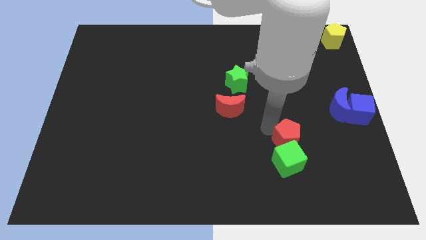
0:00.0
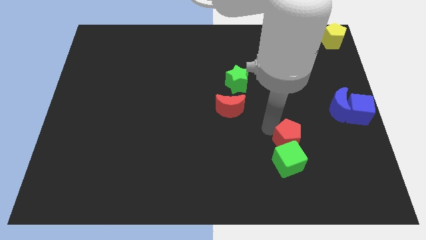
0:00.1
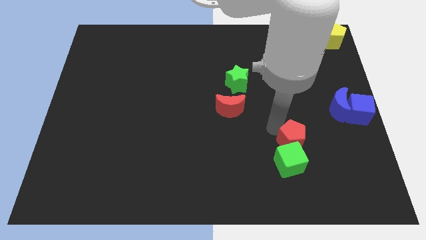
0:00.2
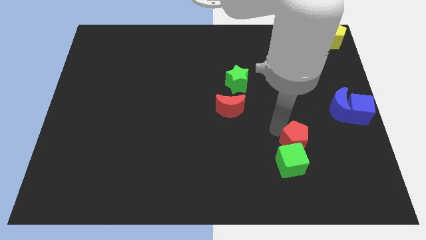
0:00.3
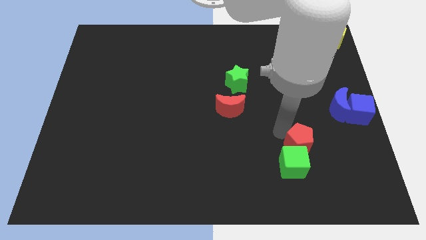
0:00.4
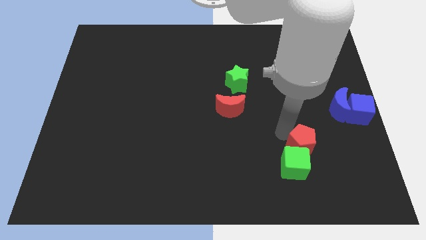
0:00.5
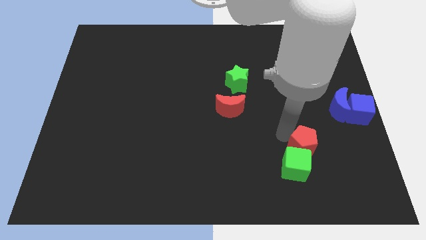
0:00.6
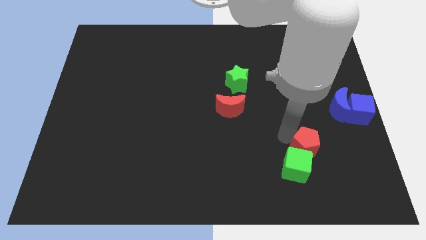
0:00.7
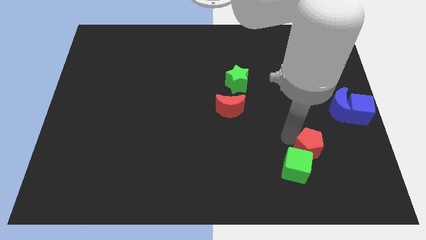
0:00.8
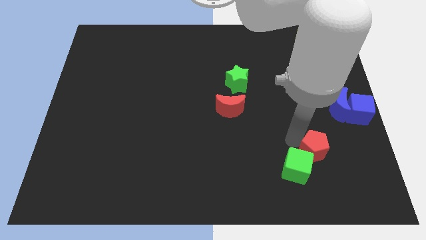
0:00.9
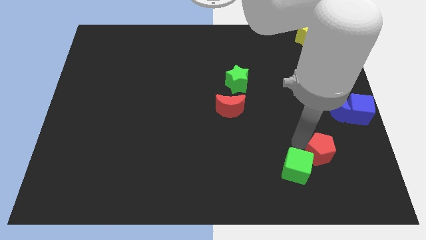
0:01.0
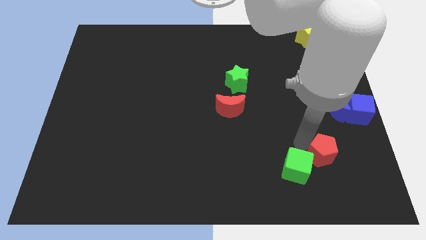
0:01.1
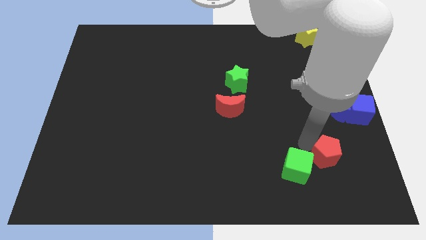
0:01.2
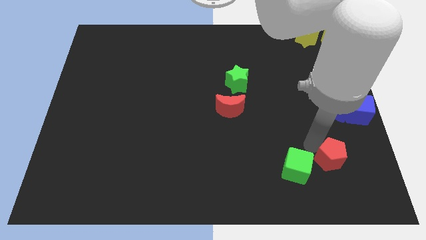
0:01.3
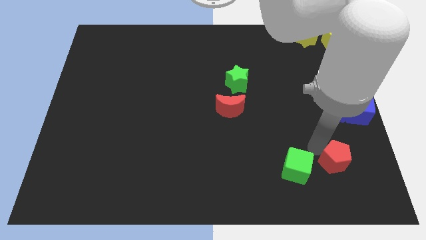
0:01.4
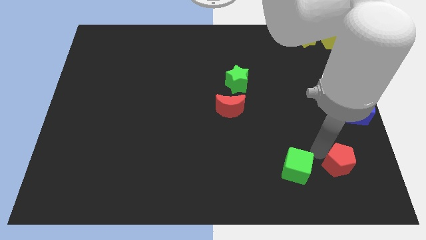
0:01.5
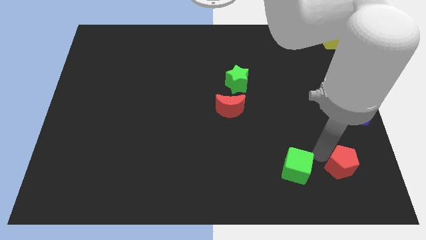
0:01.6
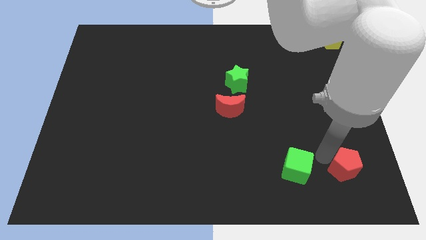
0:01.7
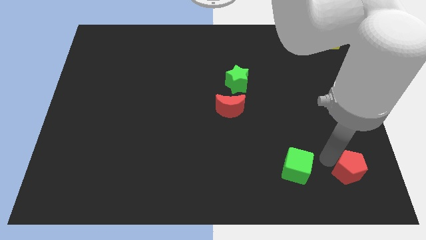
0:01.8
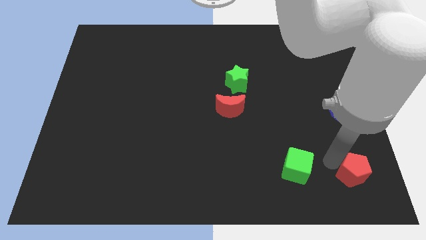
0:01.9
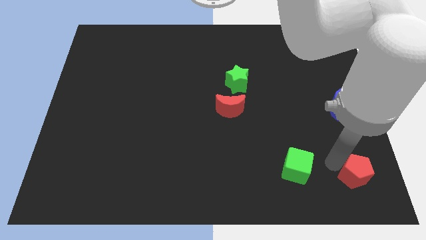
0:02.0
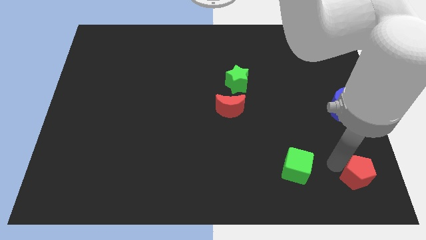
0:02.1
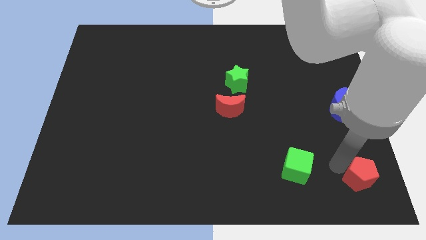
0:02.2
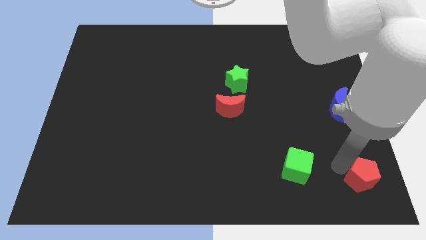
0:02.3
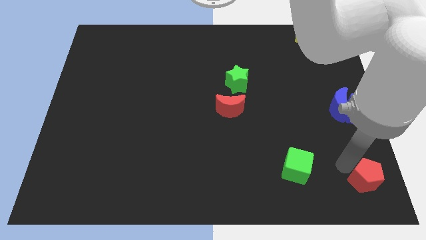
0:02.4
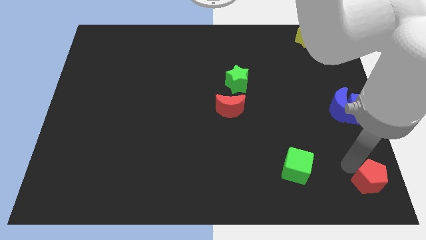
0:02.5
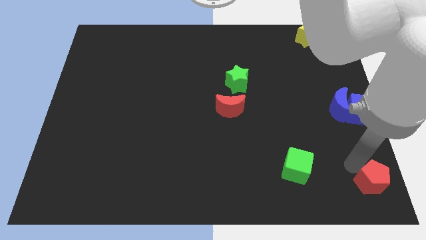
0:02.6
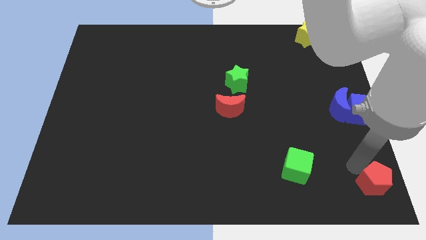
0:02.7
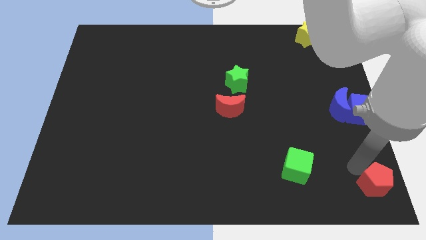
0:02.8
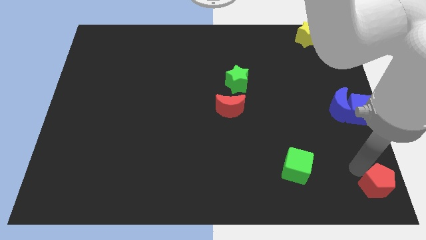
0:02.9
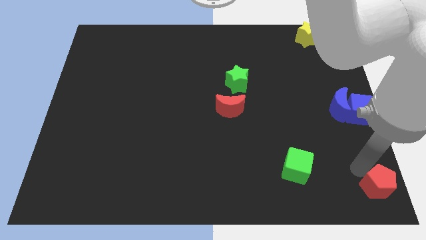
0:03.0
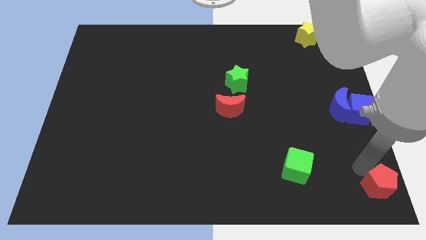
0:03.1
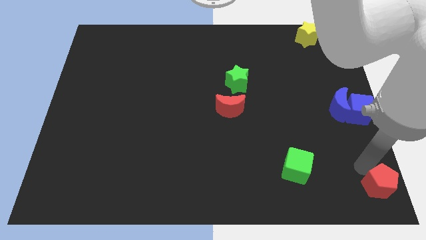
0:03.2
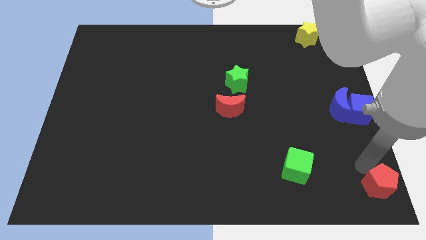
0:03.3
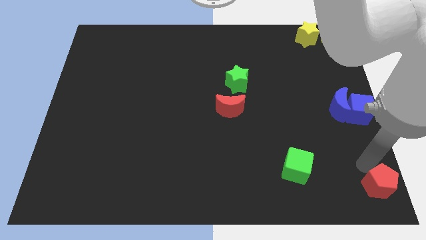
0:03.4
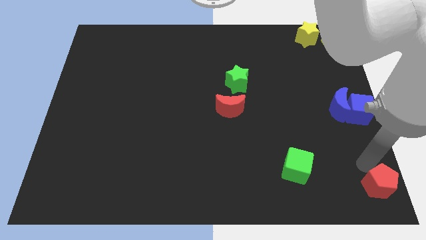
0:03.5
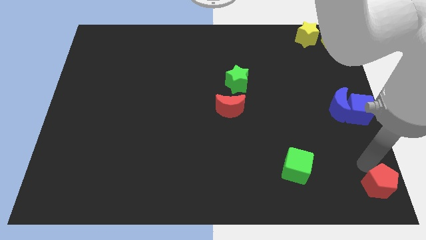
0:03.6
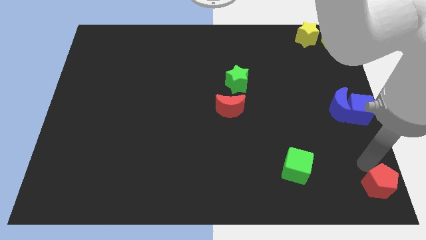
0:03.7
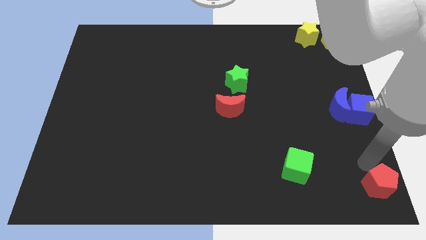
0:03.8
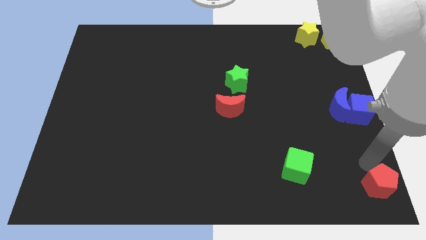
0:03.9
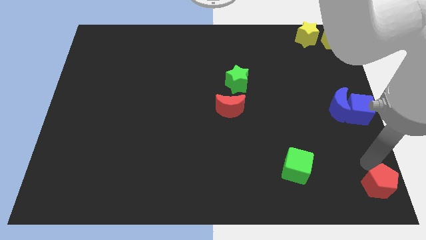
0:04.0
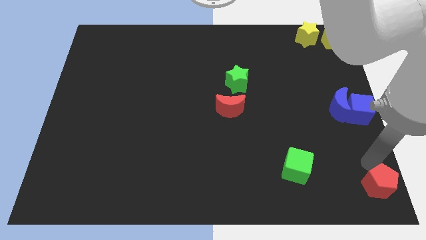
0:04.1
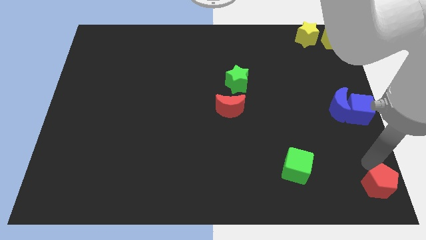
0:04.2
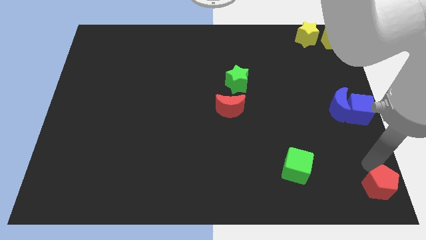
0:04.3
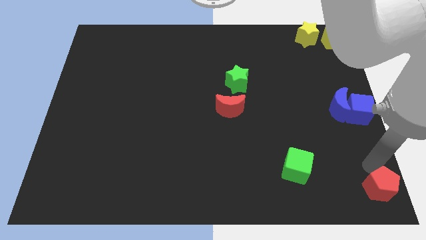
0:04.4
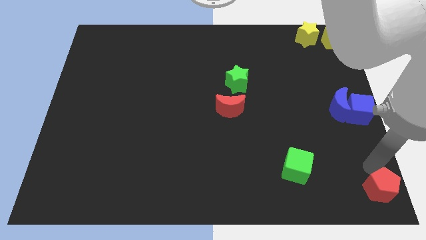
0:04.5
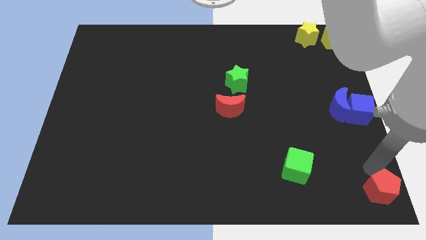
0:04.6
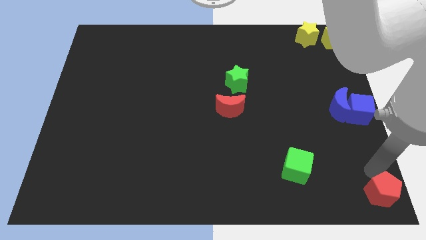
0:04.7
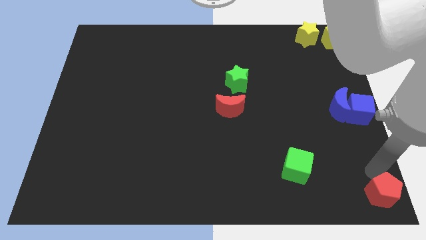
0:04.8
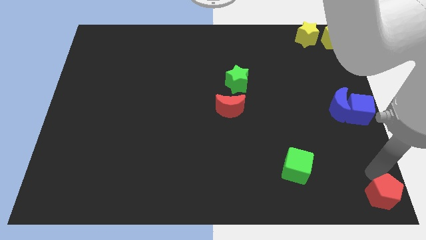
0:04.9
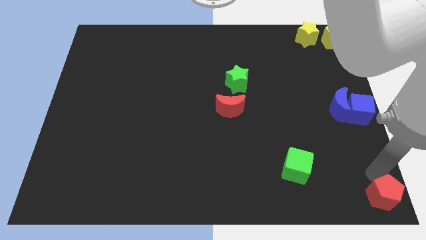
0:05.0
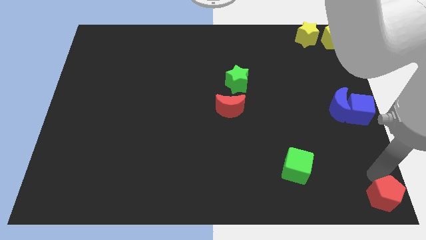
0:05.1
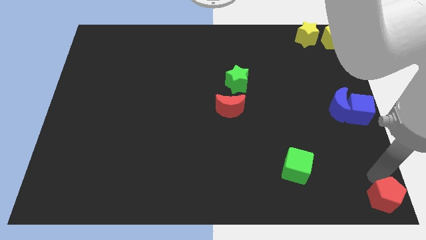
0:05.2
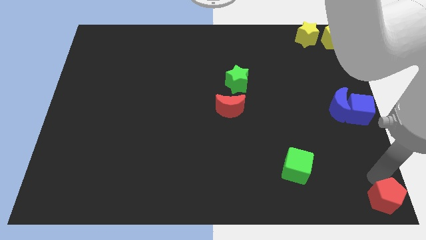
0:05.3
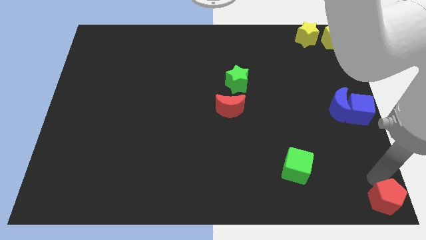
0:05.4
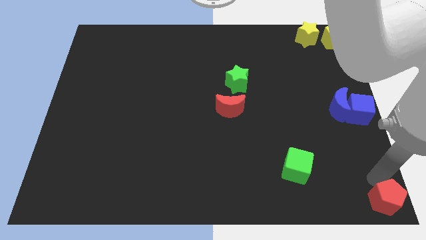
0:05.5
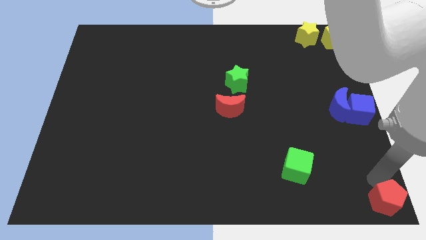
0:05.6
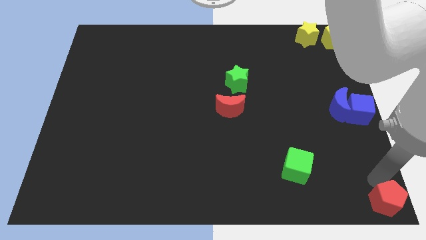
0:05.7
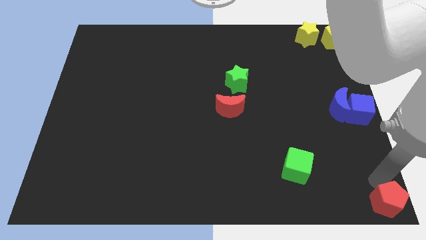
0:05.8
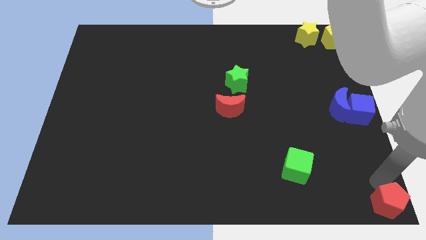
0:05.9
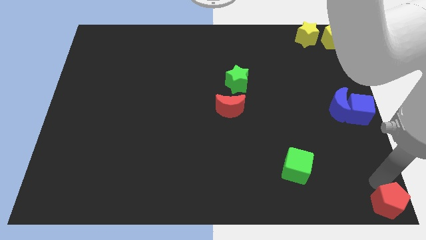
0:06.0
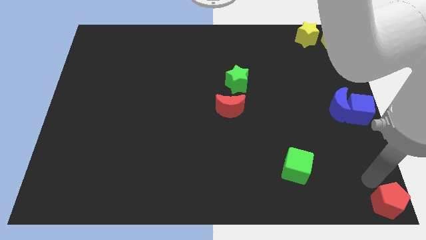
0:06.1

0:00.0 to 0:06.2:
push the red pentagon towards the bottom right corner of the board

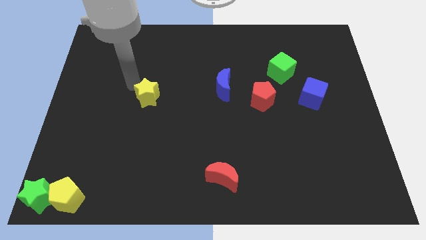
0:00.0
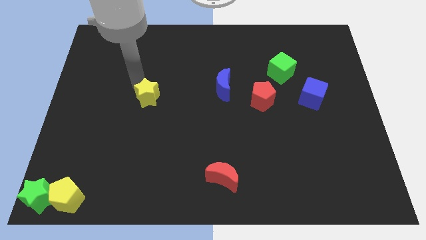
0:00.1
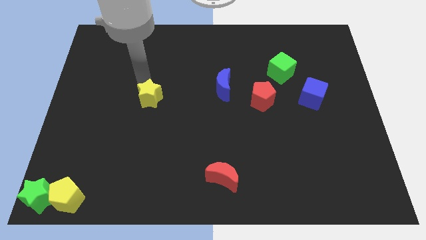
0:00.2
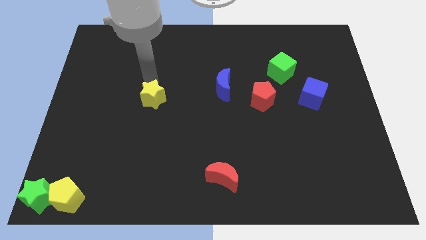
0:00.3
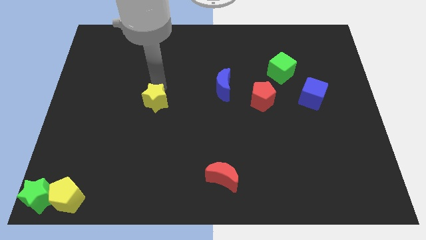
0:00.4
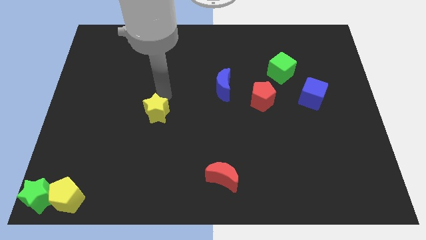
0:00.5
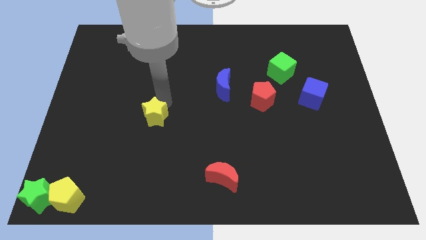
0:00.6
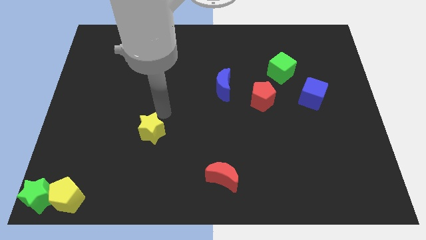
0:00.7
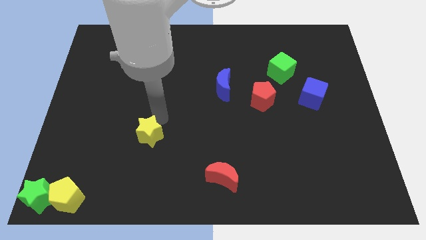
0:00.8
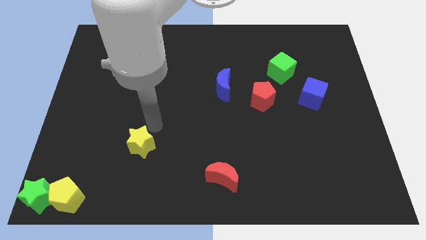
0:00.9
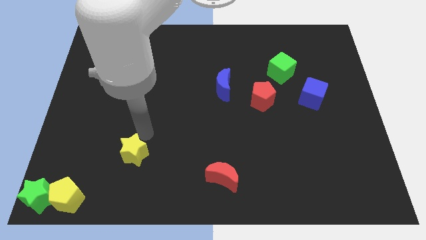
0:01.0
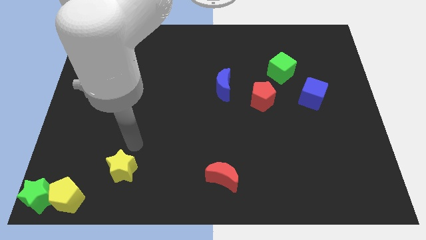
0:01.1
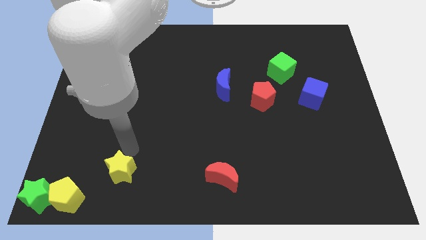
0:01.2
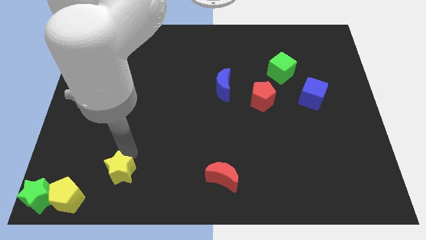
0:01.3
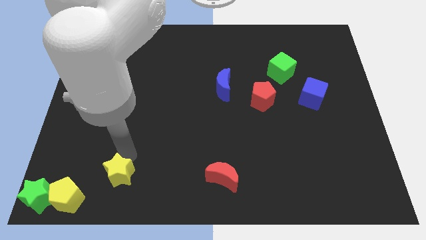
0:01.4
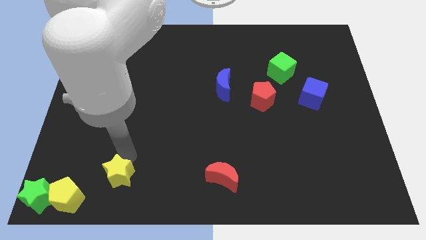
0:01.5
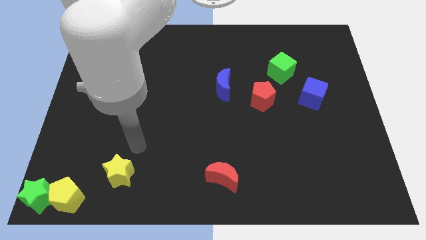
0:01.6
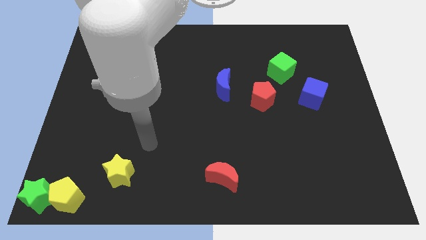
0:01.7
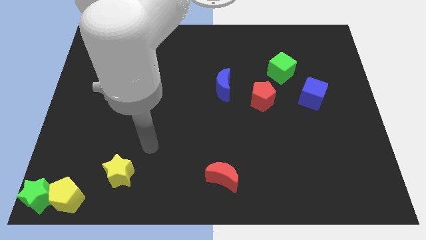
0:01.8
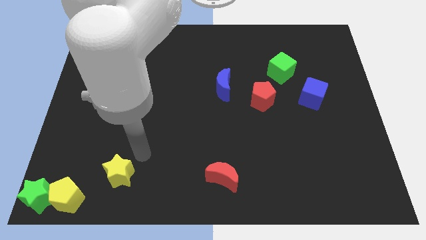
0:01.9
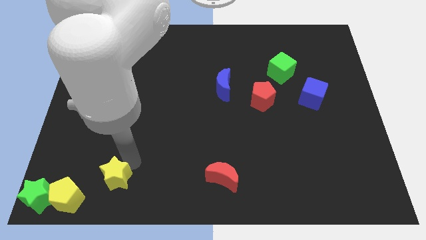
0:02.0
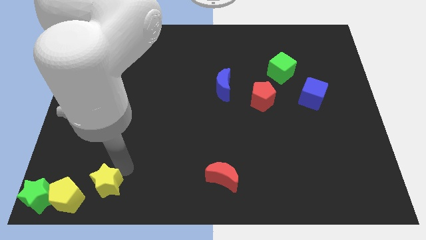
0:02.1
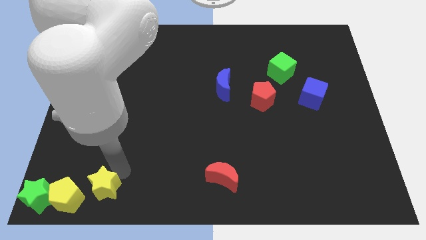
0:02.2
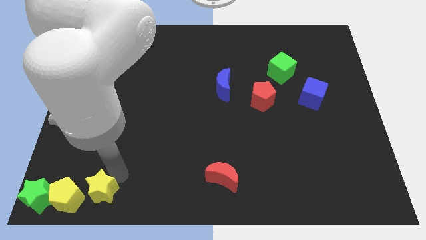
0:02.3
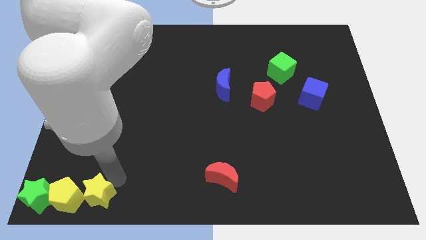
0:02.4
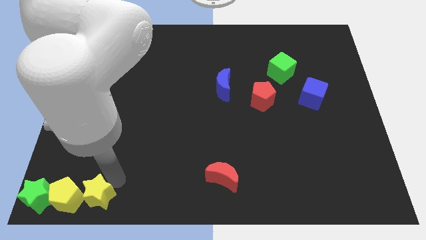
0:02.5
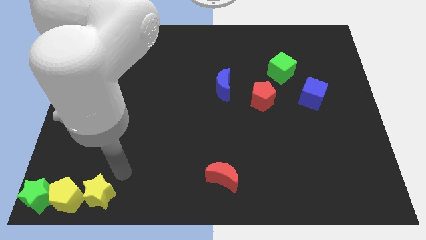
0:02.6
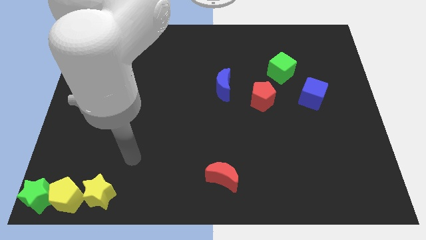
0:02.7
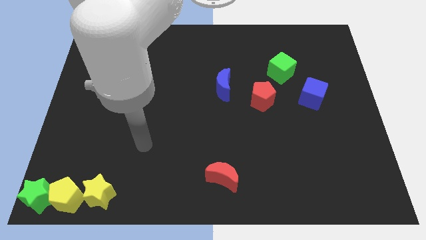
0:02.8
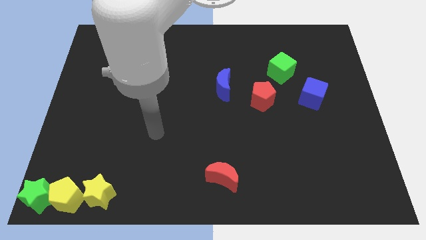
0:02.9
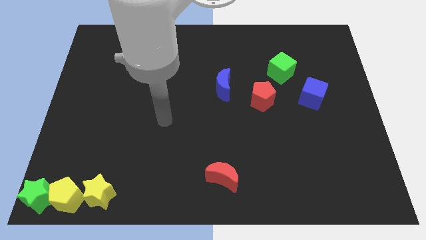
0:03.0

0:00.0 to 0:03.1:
push the yellow star to the left of yellow pentagon
